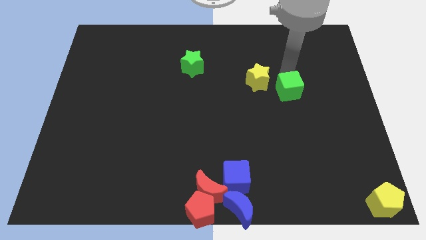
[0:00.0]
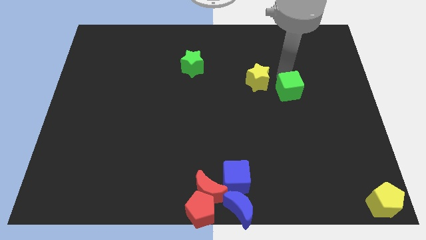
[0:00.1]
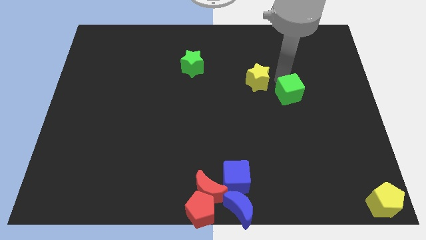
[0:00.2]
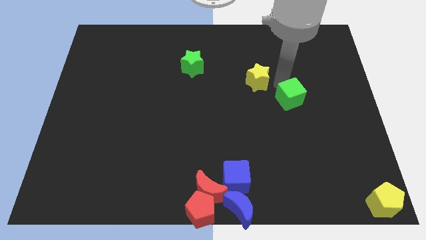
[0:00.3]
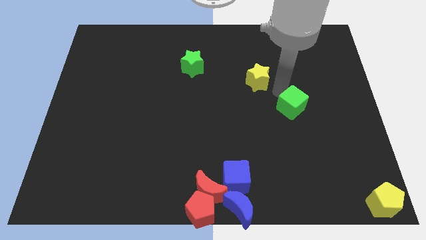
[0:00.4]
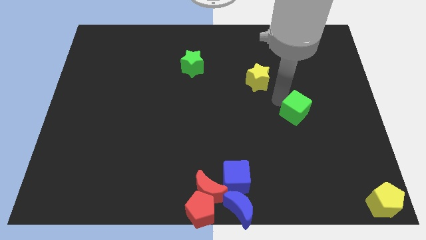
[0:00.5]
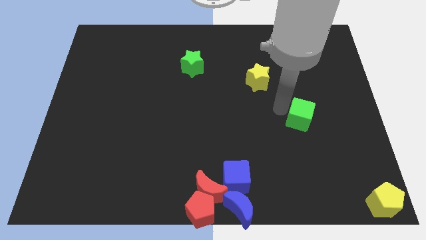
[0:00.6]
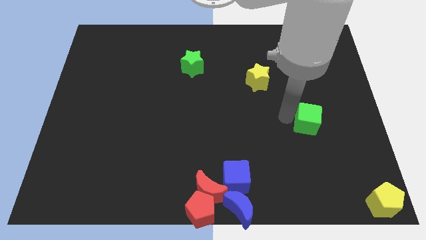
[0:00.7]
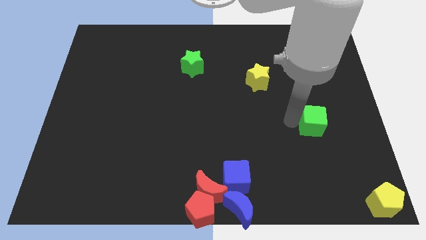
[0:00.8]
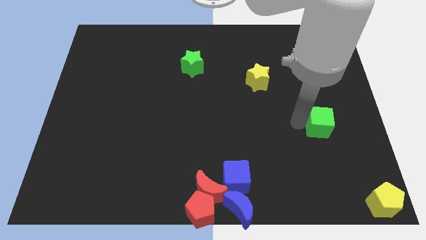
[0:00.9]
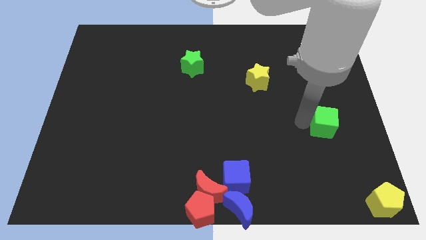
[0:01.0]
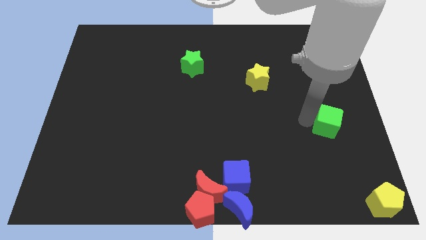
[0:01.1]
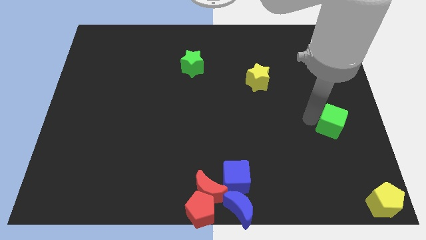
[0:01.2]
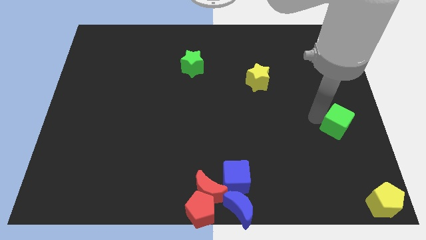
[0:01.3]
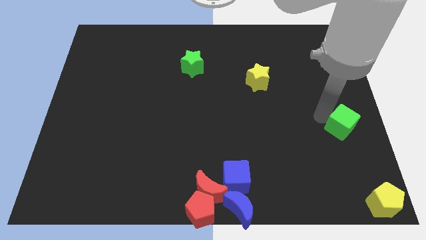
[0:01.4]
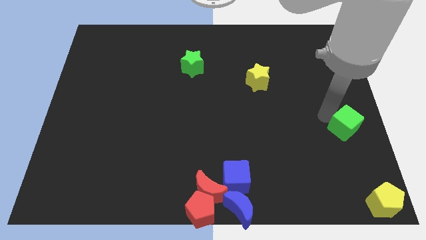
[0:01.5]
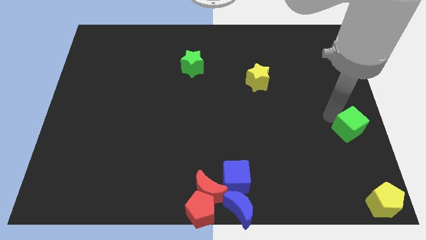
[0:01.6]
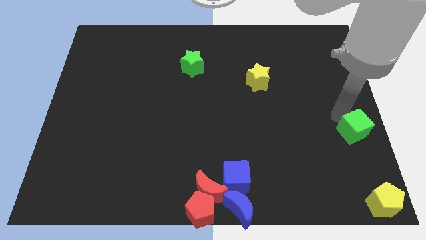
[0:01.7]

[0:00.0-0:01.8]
place green cube above yellow pentagon

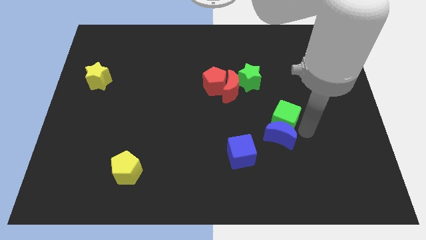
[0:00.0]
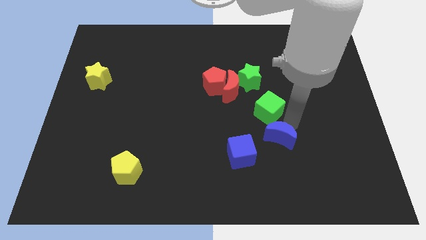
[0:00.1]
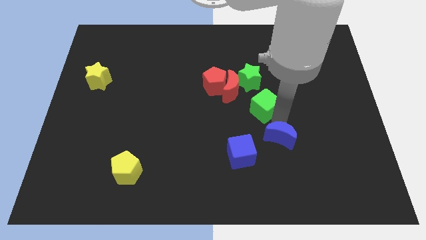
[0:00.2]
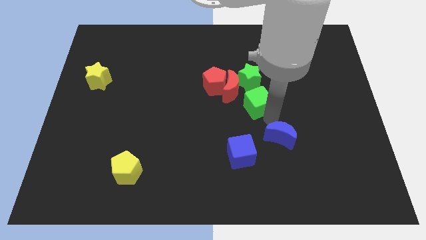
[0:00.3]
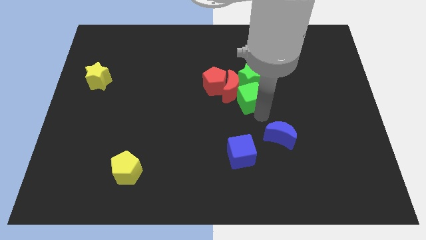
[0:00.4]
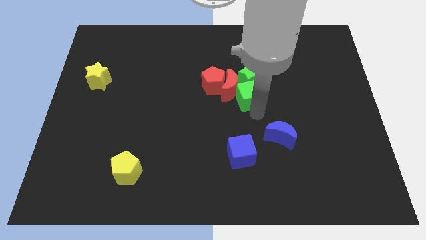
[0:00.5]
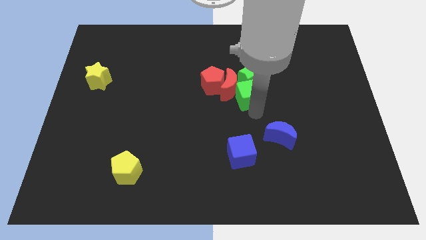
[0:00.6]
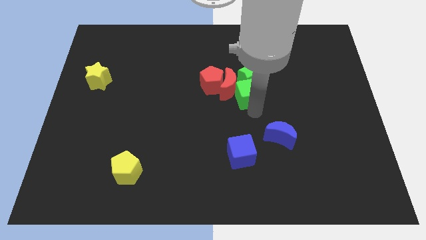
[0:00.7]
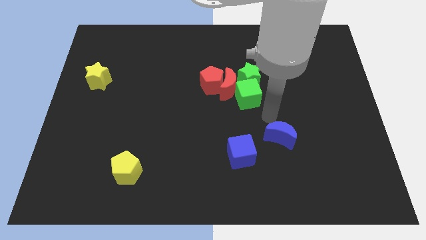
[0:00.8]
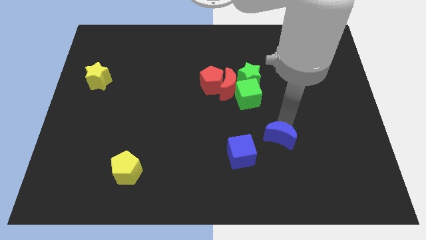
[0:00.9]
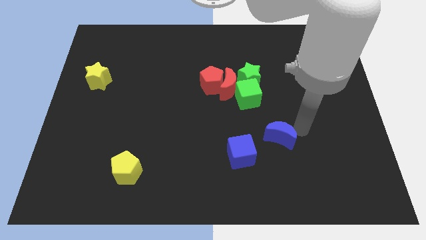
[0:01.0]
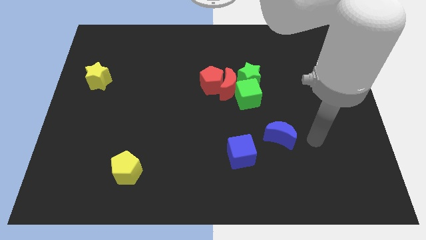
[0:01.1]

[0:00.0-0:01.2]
place the blue cube to the bottom of the green star

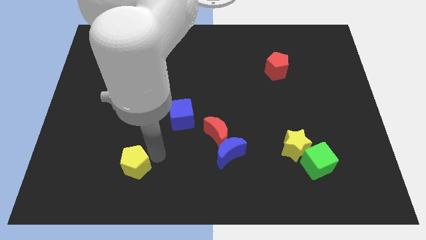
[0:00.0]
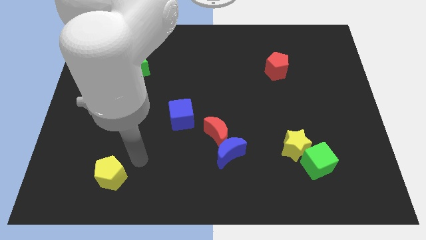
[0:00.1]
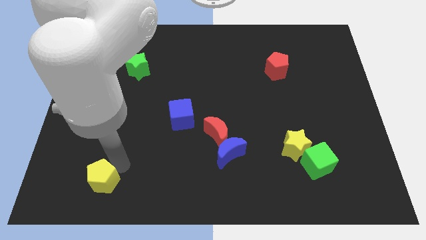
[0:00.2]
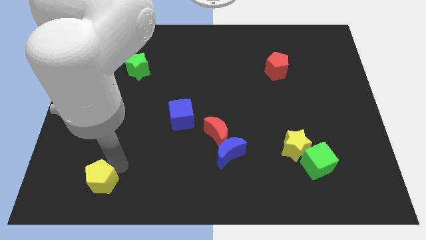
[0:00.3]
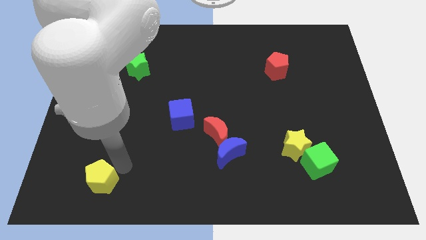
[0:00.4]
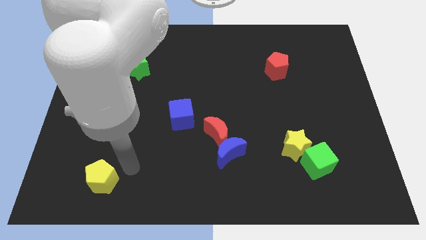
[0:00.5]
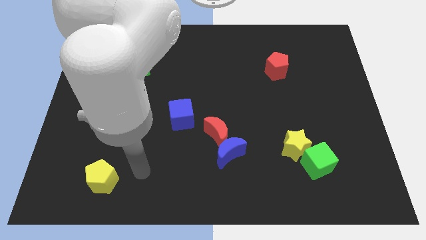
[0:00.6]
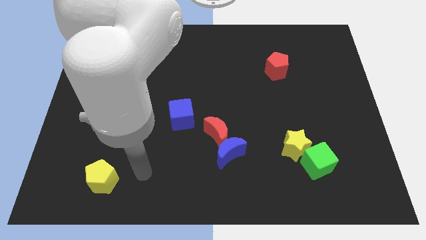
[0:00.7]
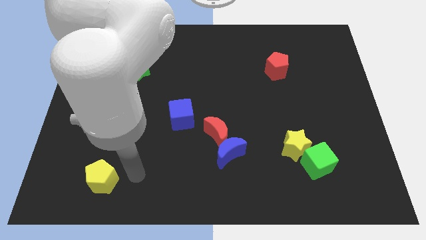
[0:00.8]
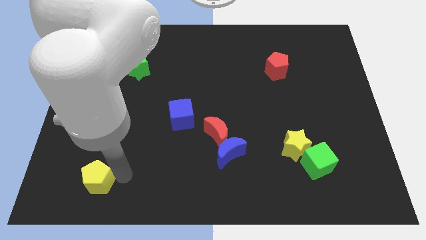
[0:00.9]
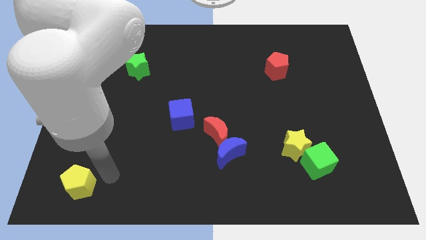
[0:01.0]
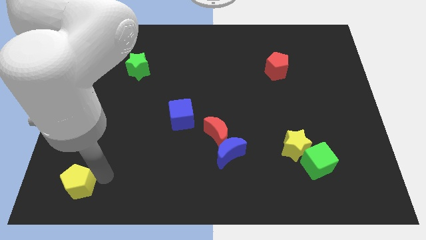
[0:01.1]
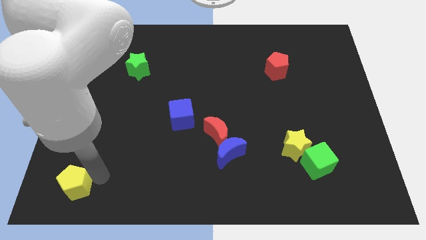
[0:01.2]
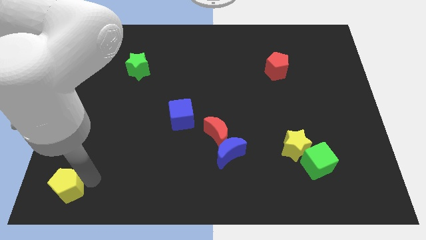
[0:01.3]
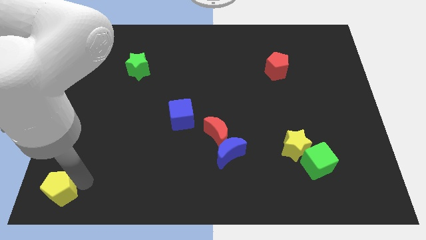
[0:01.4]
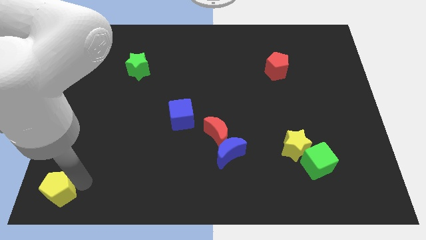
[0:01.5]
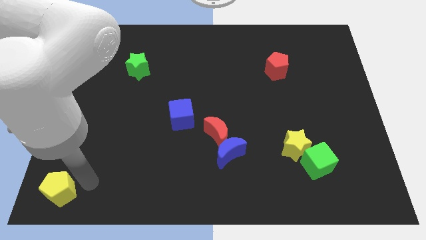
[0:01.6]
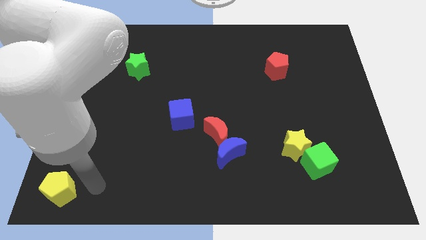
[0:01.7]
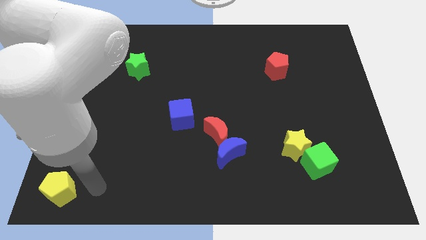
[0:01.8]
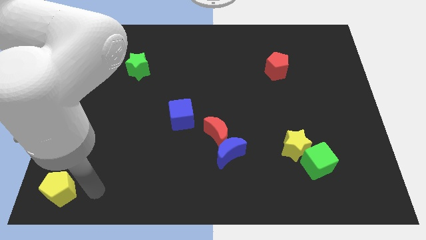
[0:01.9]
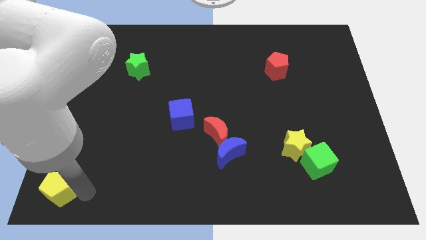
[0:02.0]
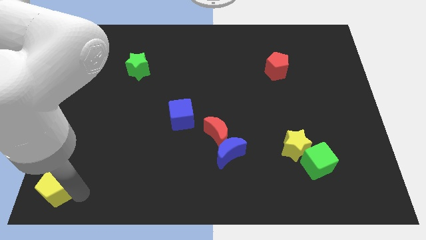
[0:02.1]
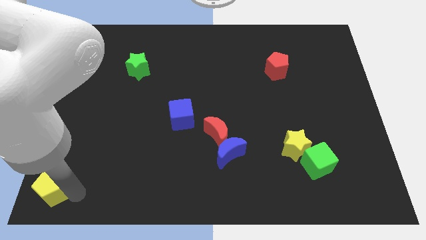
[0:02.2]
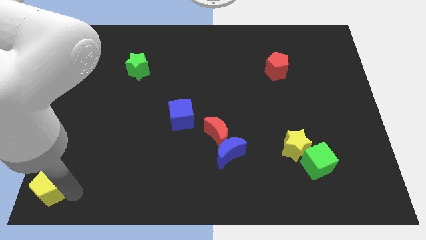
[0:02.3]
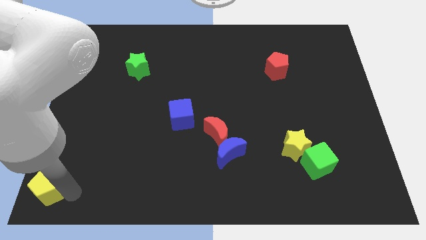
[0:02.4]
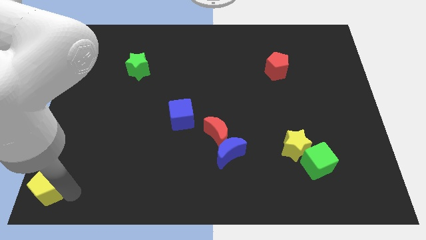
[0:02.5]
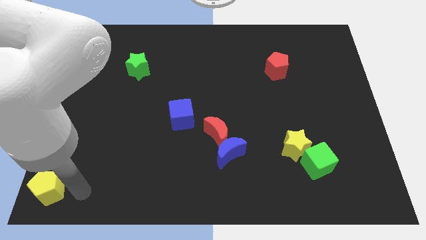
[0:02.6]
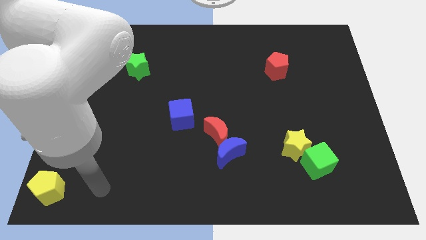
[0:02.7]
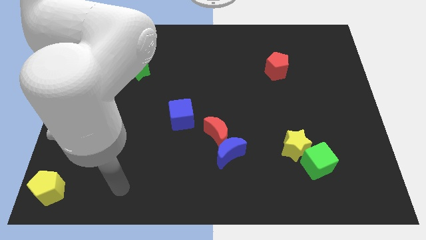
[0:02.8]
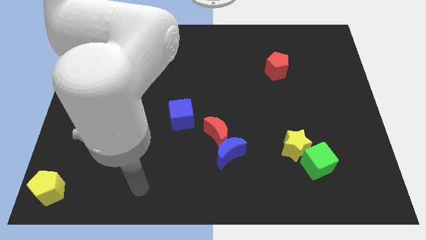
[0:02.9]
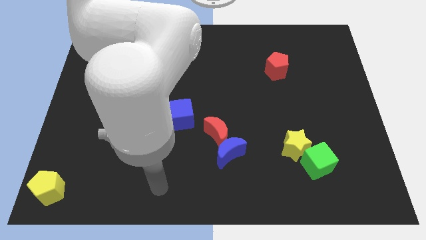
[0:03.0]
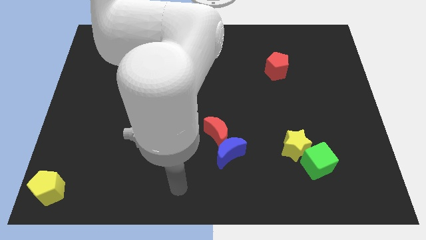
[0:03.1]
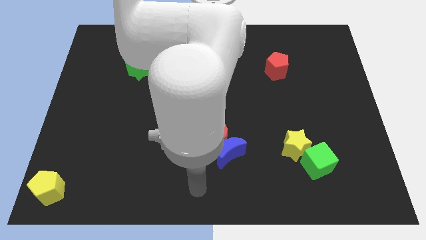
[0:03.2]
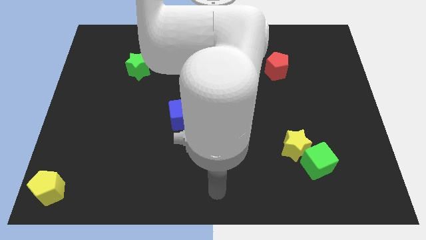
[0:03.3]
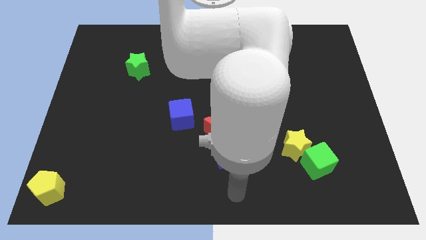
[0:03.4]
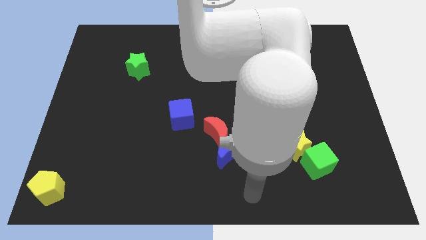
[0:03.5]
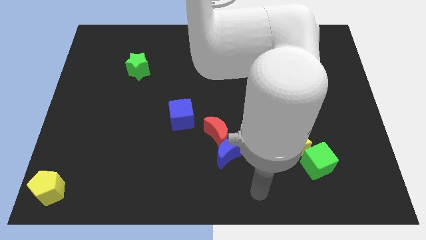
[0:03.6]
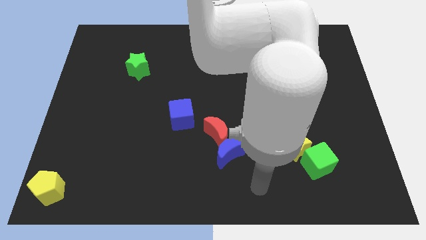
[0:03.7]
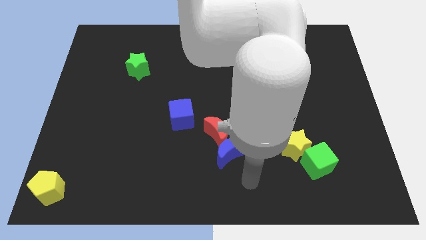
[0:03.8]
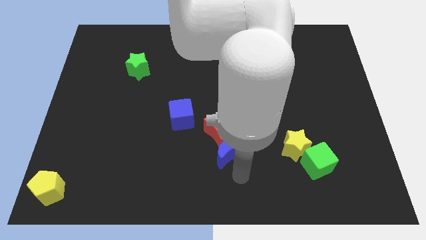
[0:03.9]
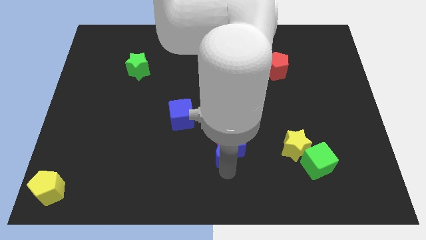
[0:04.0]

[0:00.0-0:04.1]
place the yellow pentagon to the bottom left corner of the board

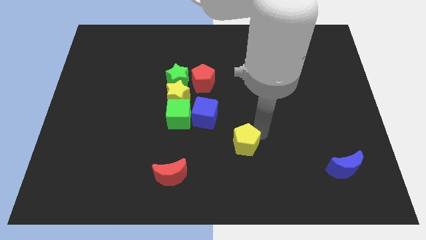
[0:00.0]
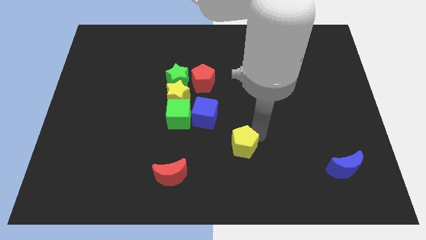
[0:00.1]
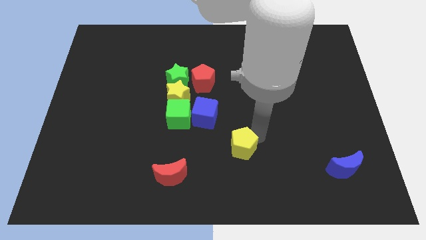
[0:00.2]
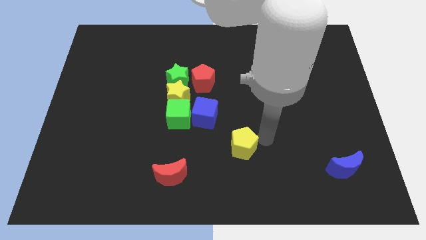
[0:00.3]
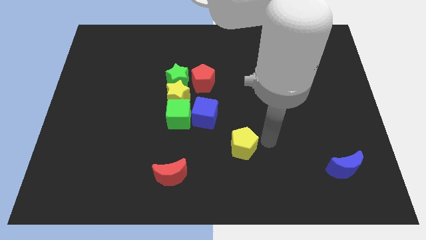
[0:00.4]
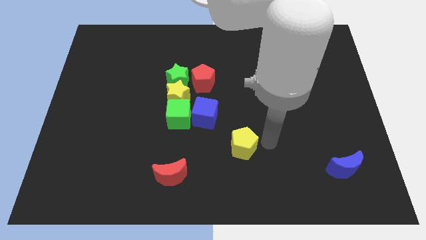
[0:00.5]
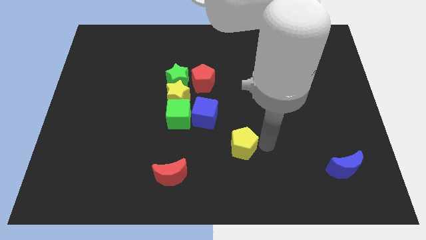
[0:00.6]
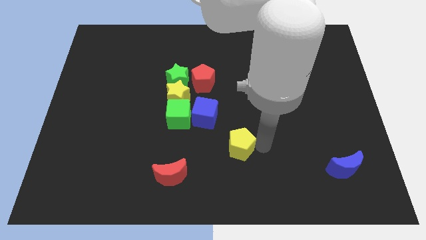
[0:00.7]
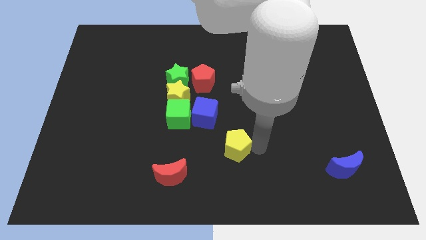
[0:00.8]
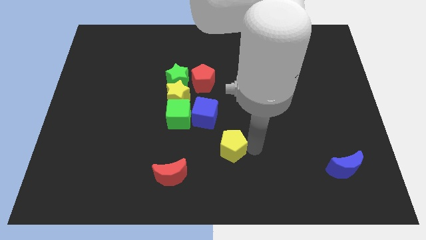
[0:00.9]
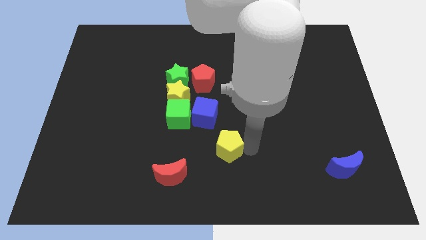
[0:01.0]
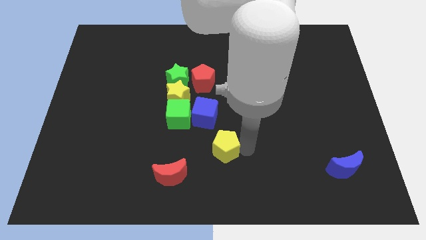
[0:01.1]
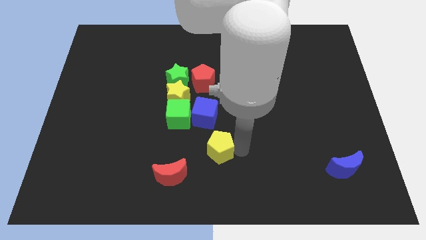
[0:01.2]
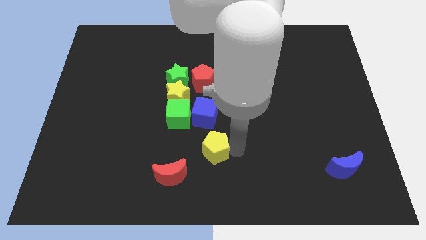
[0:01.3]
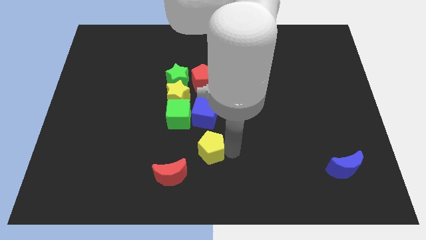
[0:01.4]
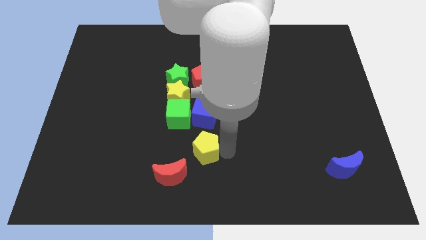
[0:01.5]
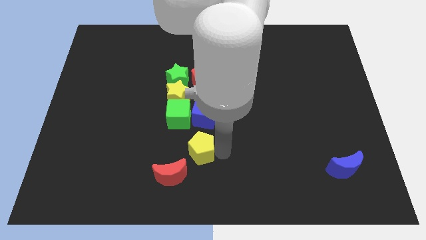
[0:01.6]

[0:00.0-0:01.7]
move the yellow pentagon below the blue cube

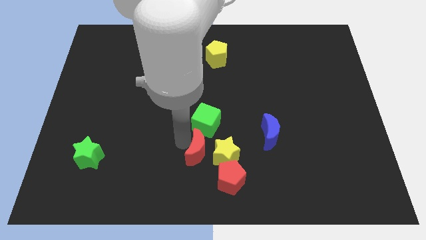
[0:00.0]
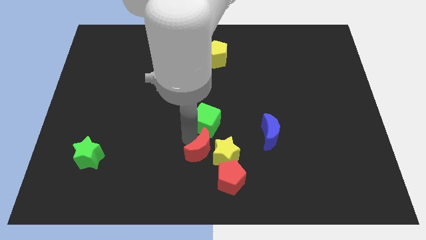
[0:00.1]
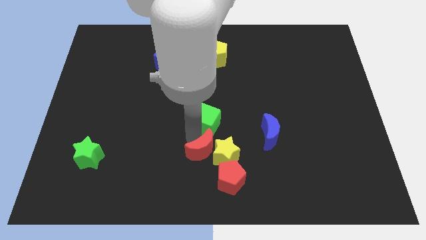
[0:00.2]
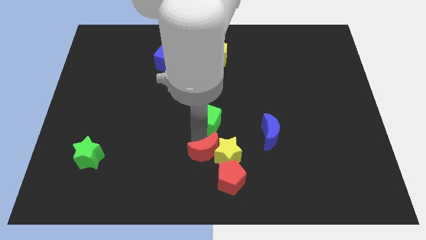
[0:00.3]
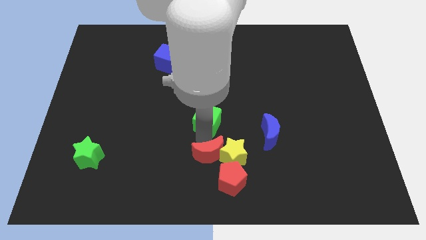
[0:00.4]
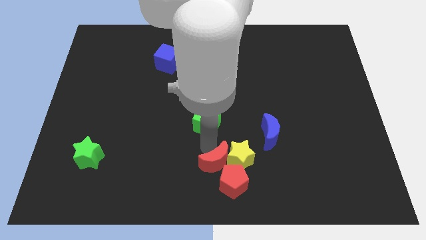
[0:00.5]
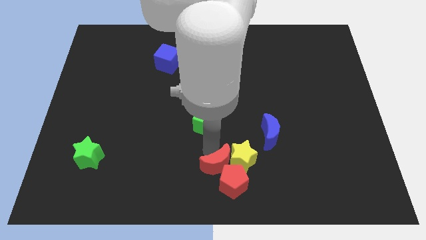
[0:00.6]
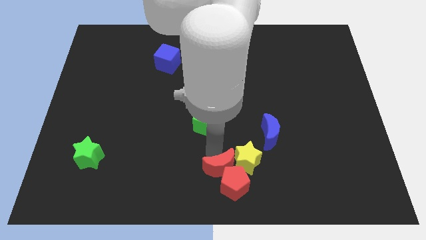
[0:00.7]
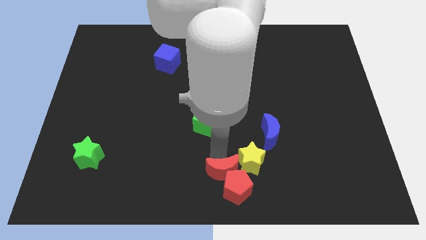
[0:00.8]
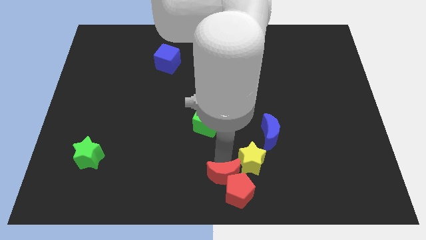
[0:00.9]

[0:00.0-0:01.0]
place the red crescent above the red pentagon
